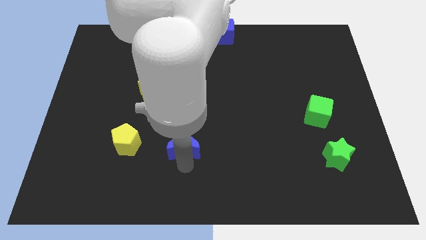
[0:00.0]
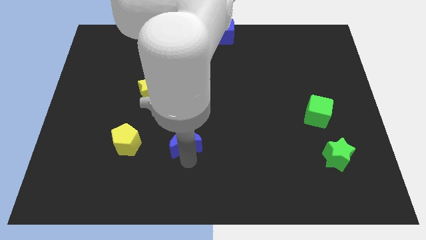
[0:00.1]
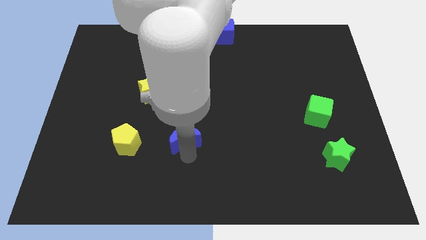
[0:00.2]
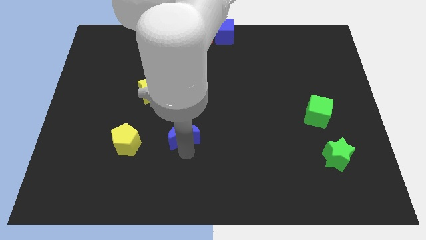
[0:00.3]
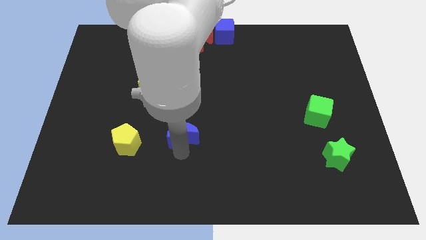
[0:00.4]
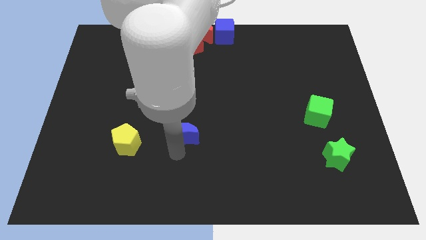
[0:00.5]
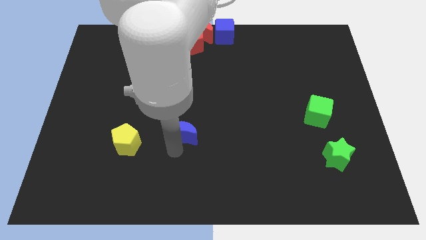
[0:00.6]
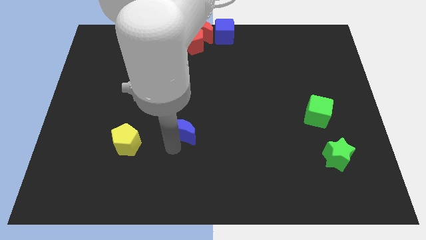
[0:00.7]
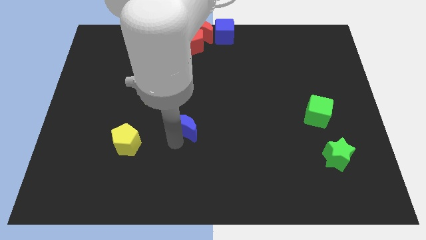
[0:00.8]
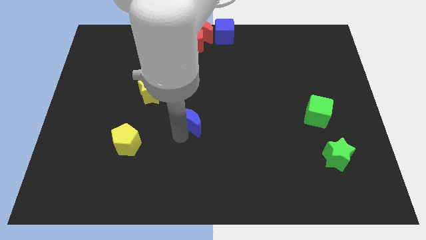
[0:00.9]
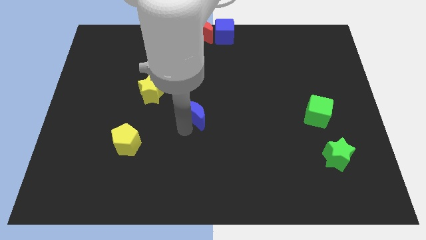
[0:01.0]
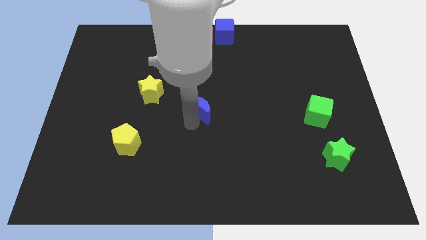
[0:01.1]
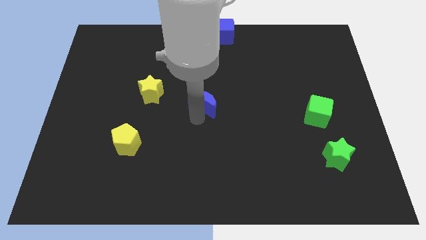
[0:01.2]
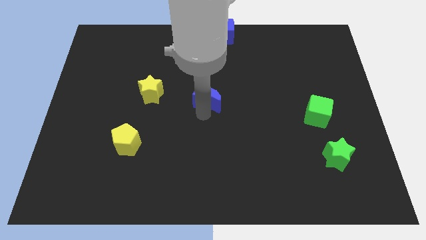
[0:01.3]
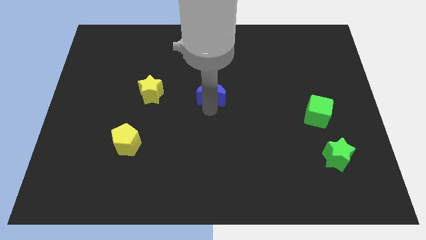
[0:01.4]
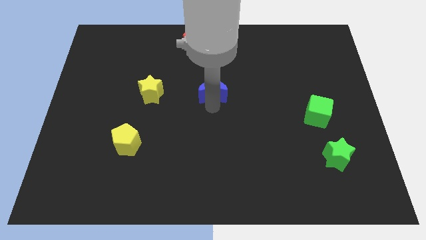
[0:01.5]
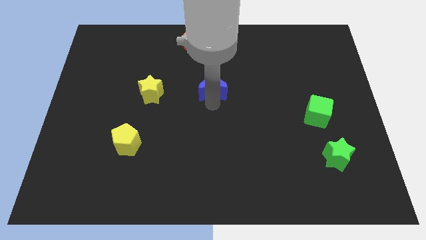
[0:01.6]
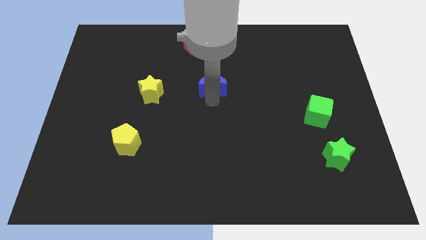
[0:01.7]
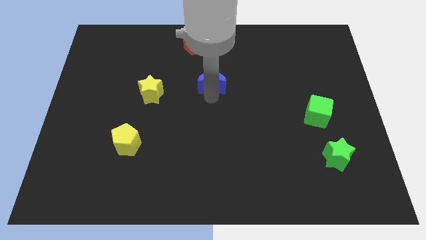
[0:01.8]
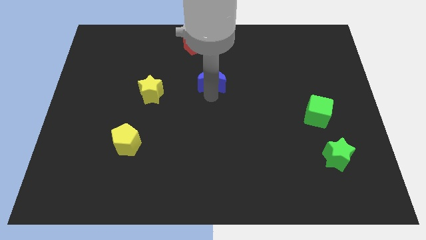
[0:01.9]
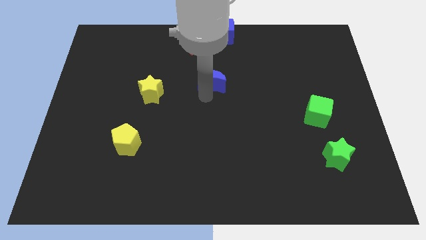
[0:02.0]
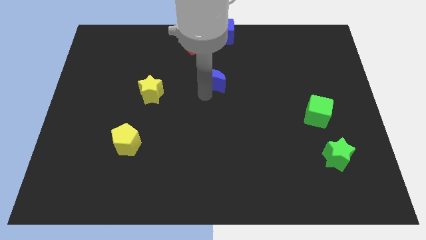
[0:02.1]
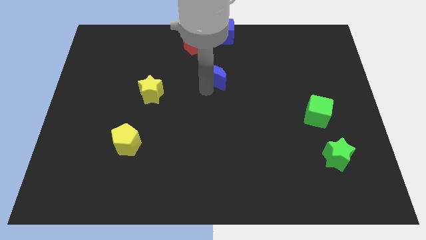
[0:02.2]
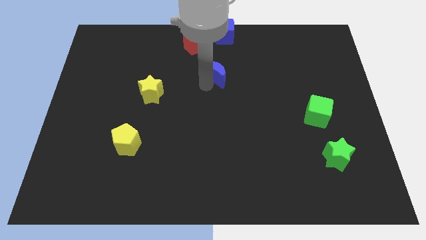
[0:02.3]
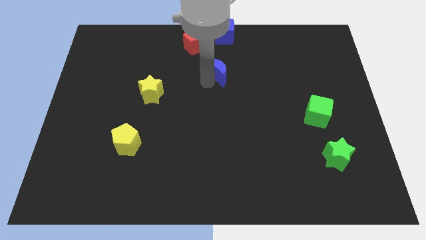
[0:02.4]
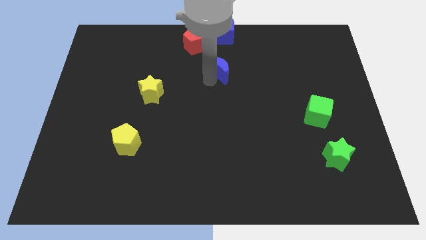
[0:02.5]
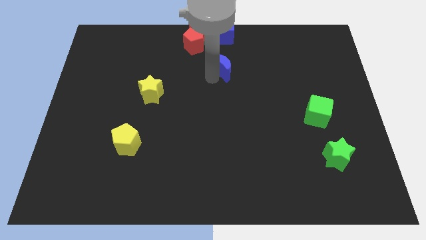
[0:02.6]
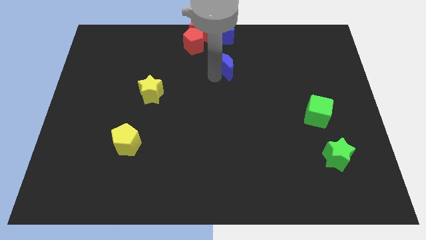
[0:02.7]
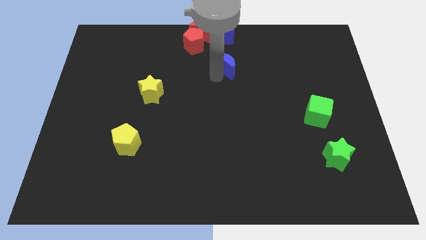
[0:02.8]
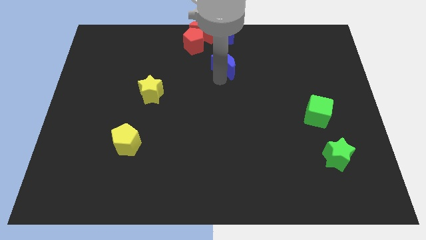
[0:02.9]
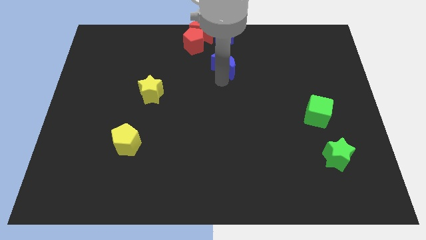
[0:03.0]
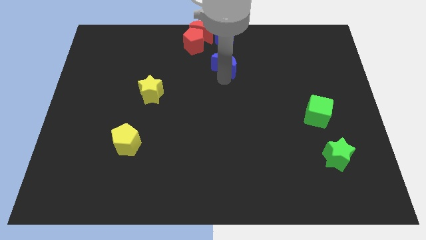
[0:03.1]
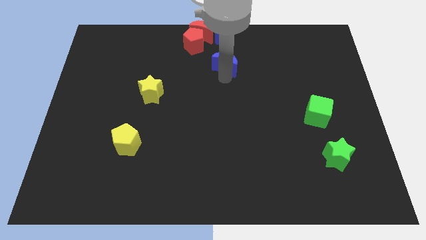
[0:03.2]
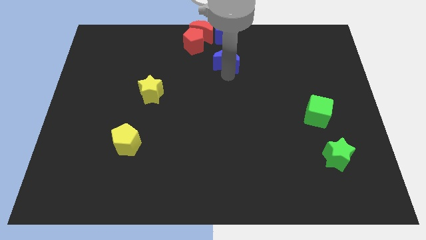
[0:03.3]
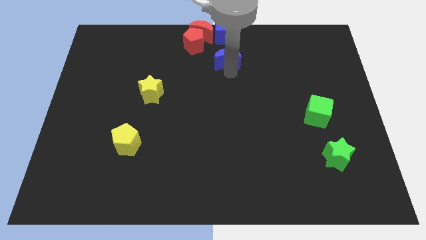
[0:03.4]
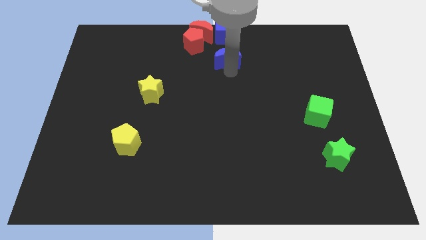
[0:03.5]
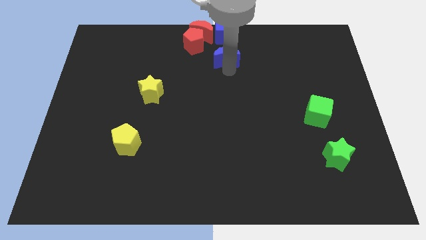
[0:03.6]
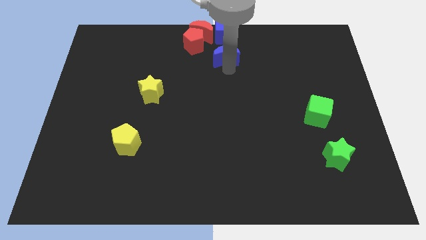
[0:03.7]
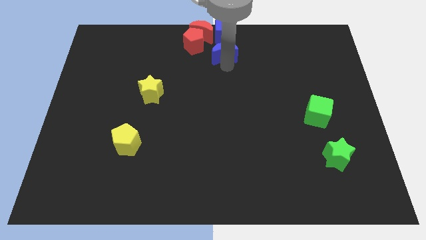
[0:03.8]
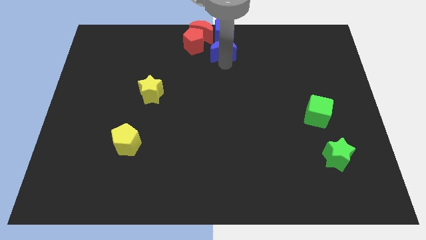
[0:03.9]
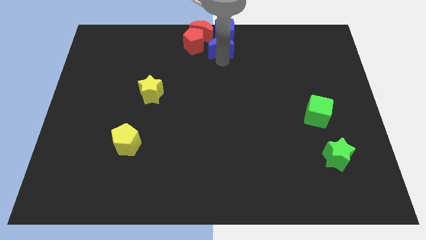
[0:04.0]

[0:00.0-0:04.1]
place the blue crescent under the blue cube

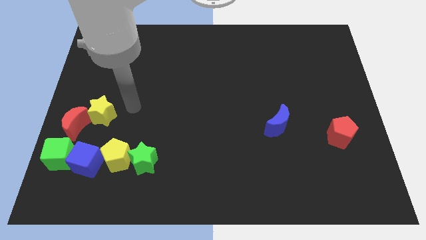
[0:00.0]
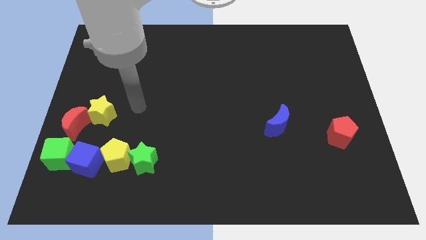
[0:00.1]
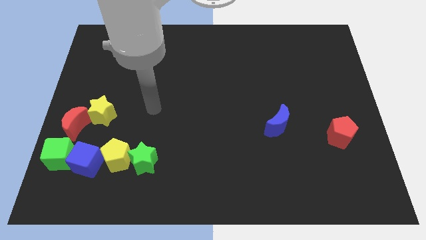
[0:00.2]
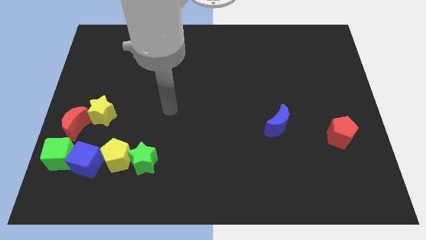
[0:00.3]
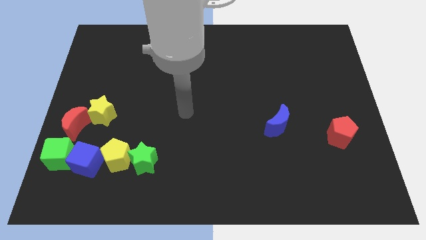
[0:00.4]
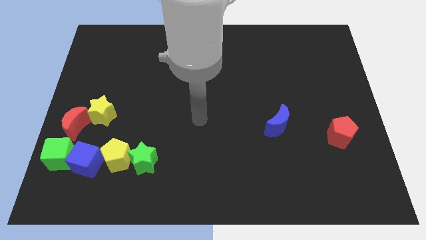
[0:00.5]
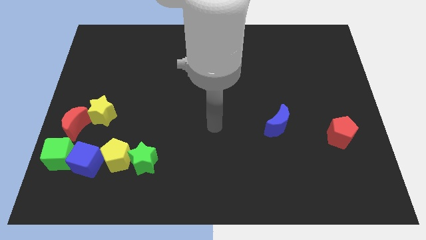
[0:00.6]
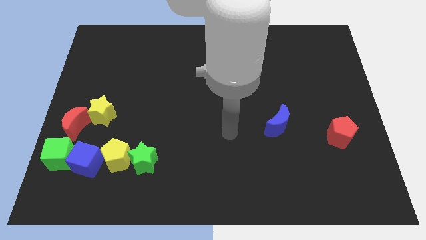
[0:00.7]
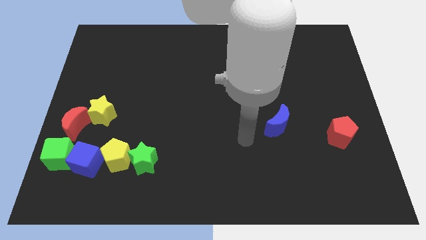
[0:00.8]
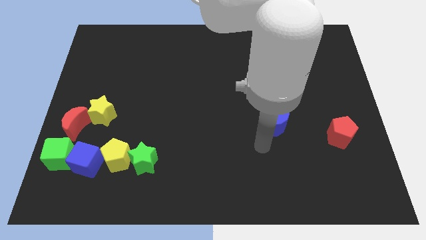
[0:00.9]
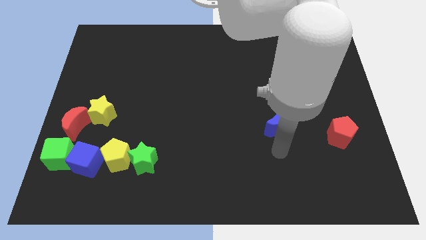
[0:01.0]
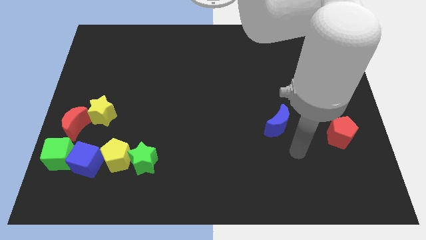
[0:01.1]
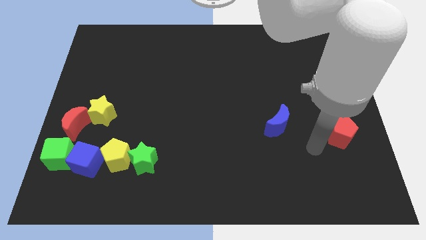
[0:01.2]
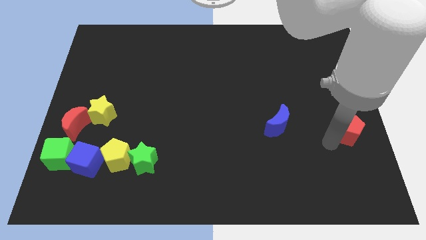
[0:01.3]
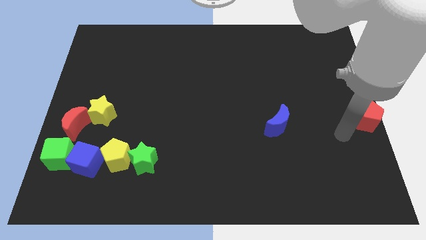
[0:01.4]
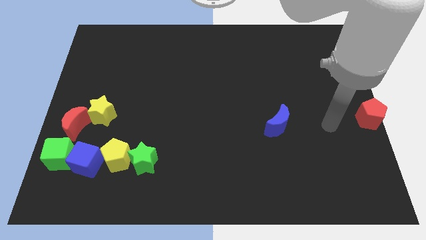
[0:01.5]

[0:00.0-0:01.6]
hit the red pentagon to the right corner of the board

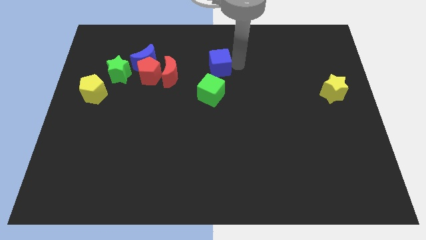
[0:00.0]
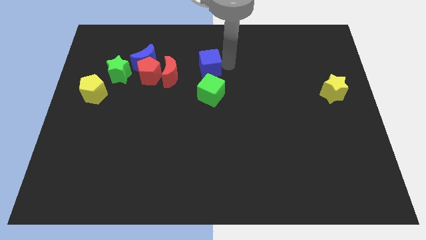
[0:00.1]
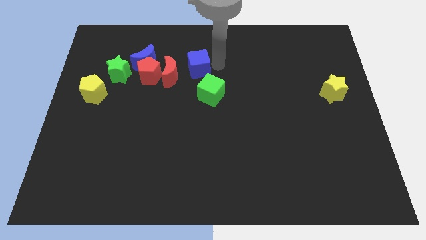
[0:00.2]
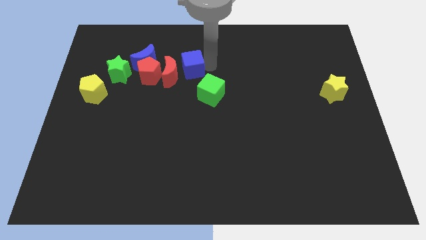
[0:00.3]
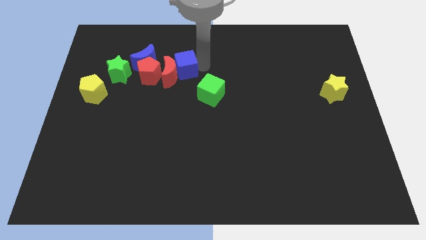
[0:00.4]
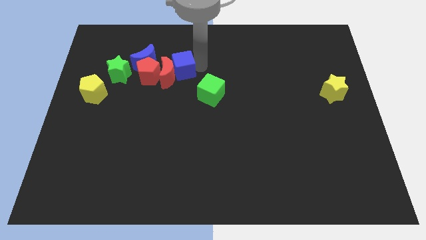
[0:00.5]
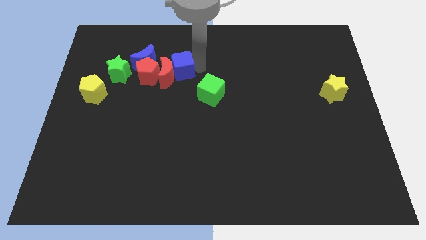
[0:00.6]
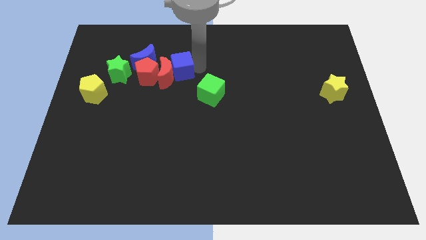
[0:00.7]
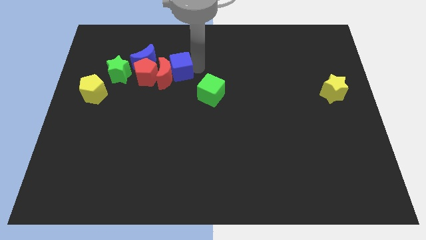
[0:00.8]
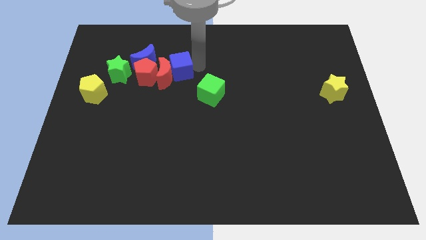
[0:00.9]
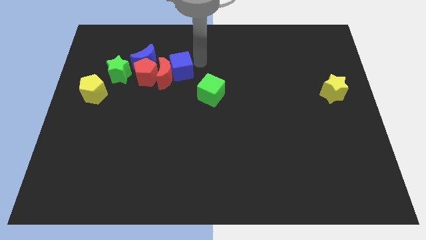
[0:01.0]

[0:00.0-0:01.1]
push blue cube into red moon

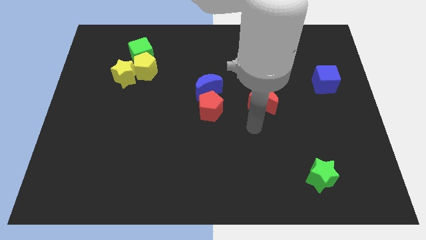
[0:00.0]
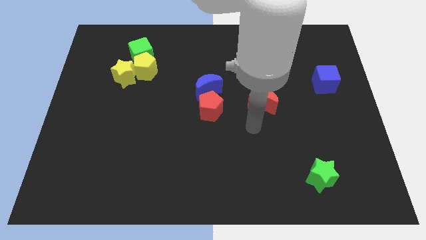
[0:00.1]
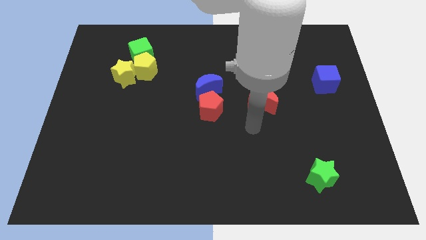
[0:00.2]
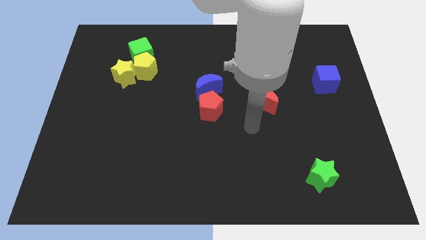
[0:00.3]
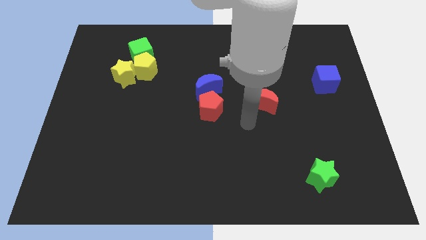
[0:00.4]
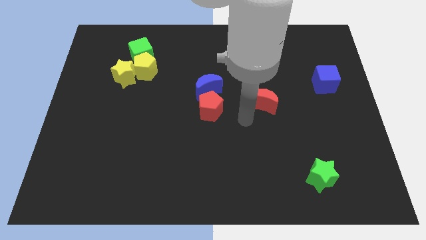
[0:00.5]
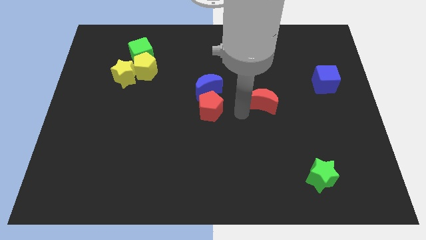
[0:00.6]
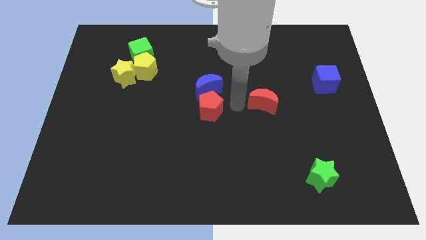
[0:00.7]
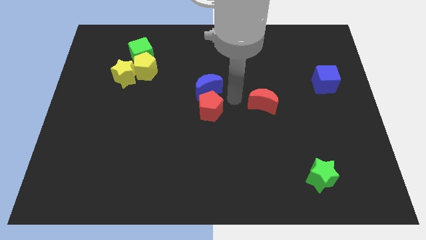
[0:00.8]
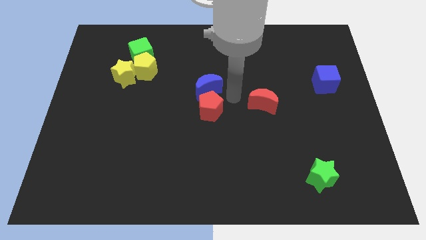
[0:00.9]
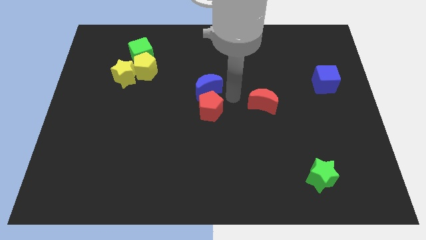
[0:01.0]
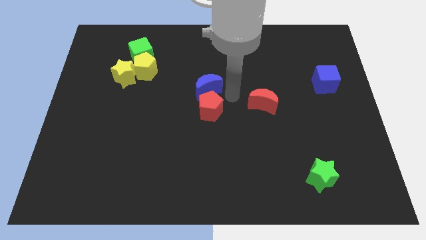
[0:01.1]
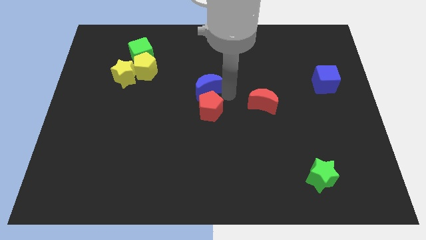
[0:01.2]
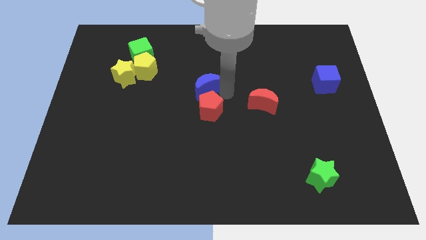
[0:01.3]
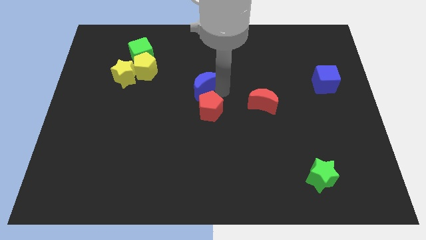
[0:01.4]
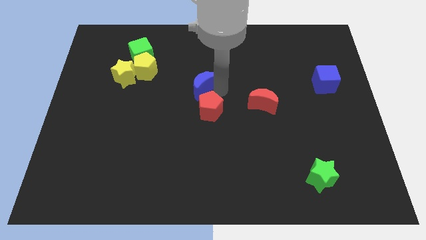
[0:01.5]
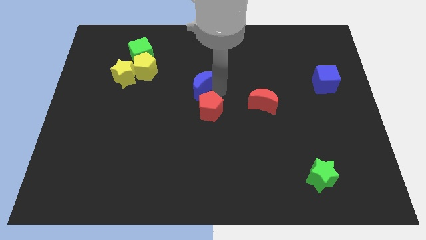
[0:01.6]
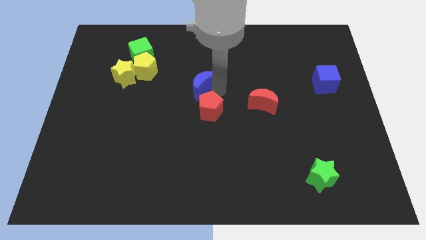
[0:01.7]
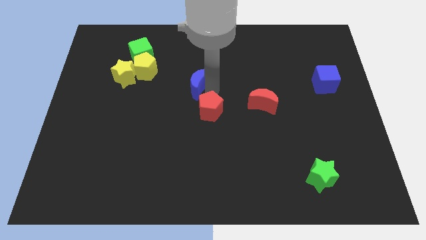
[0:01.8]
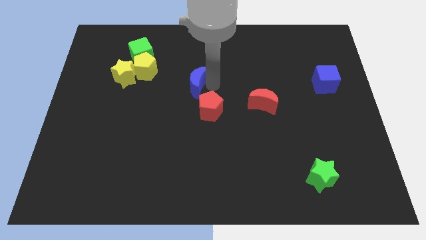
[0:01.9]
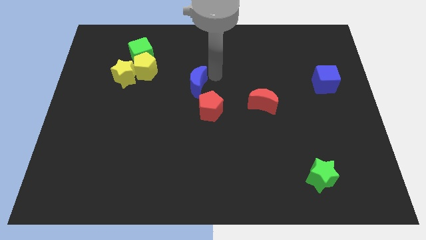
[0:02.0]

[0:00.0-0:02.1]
slightly move blue crescent diagonal to the blue cube
